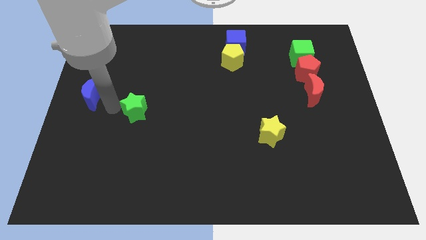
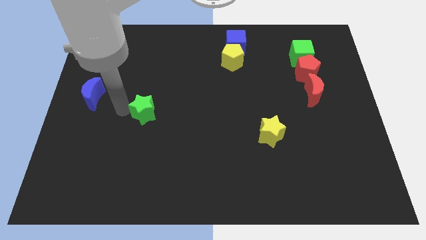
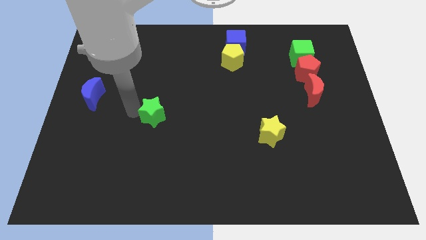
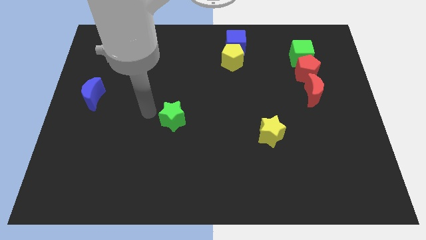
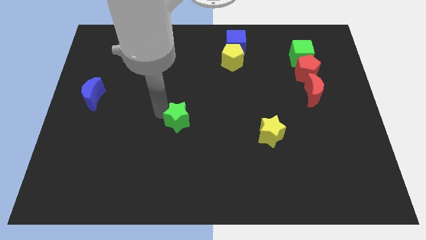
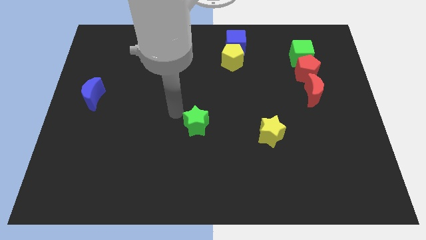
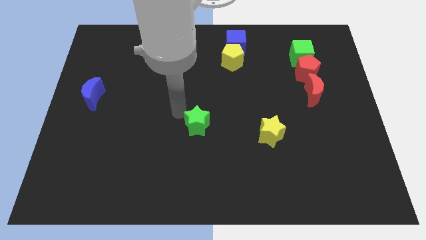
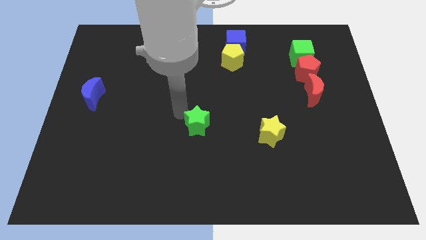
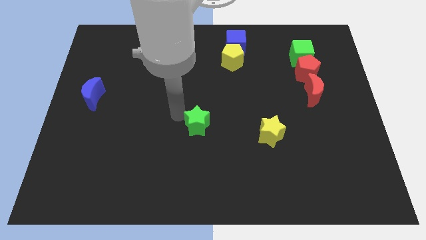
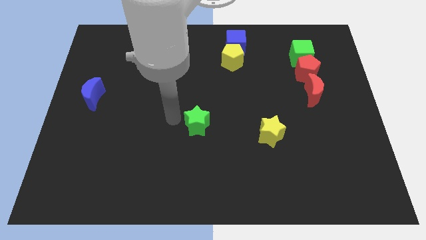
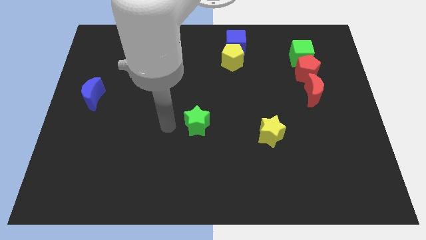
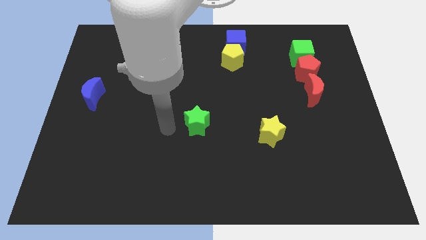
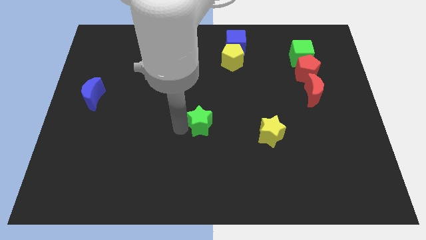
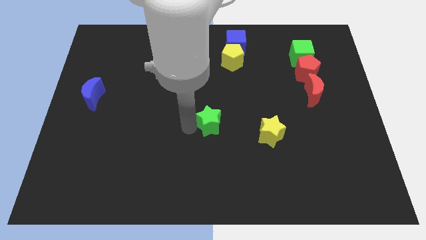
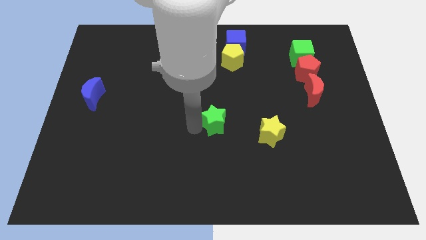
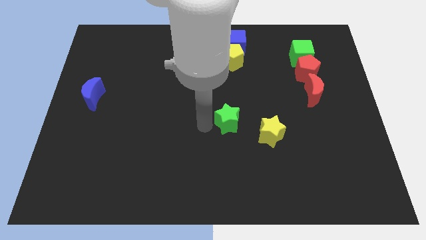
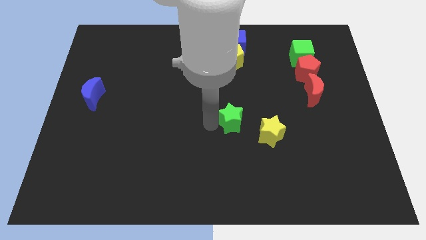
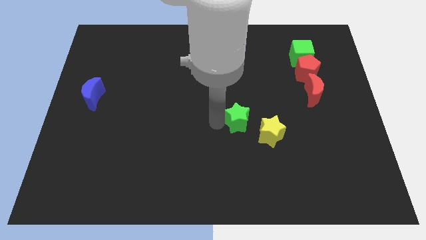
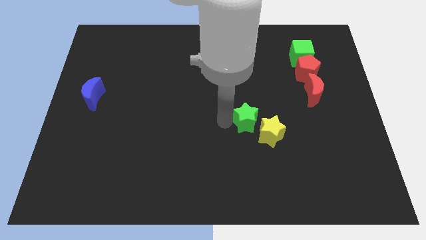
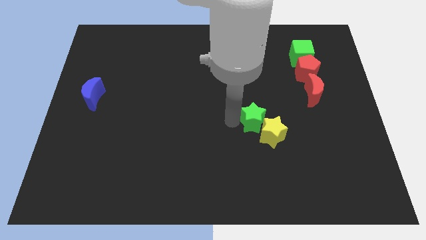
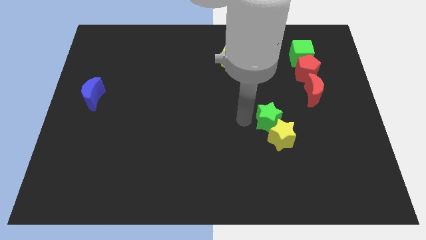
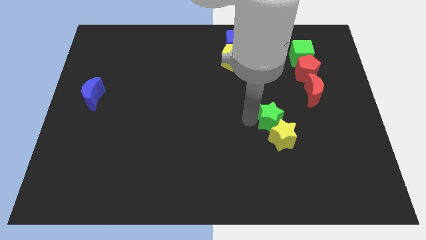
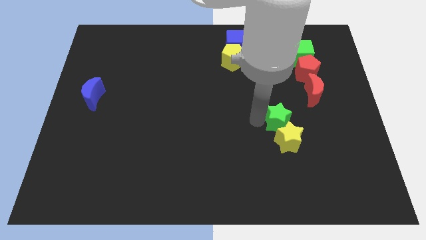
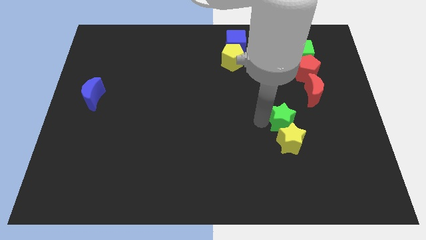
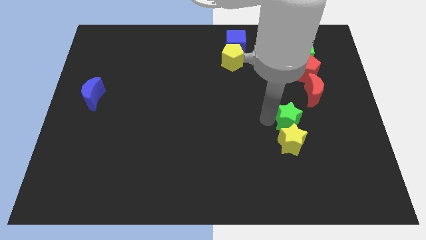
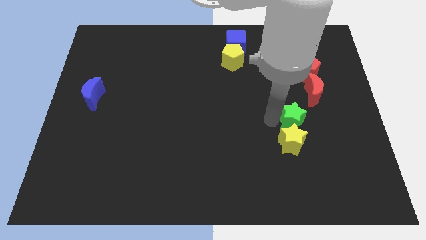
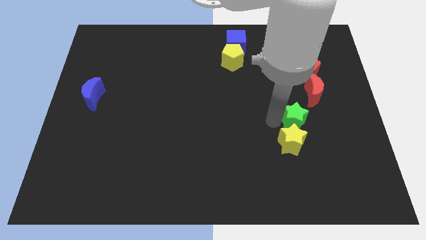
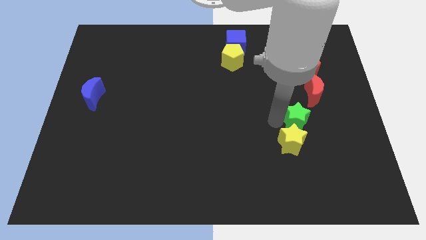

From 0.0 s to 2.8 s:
push the green star into the yellow star

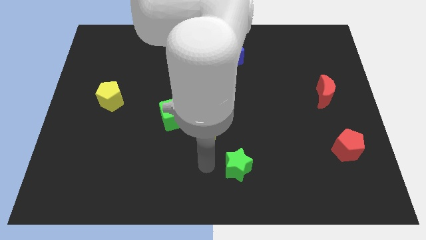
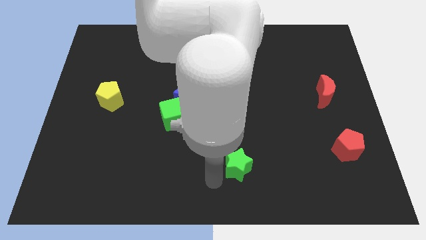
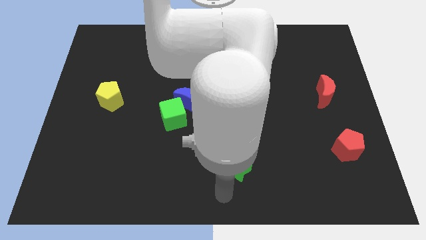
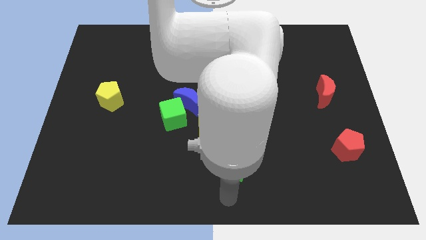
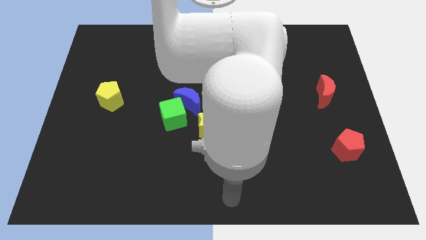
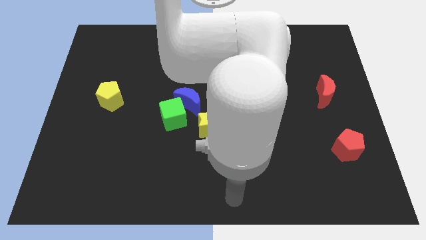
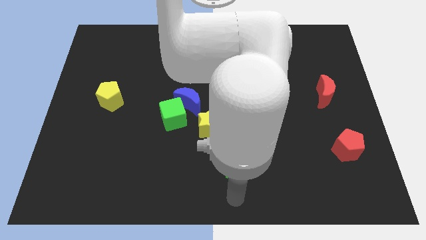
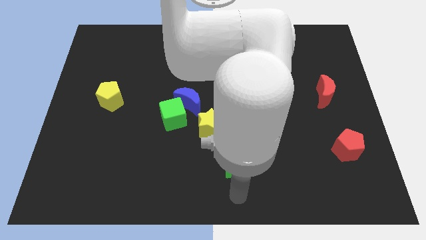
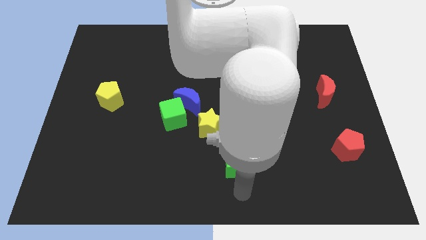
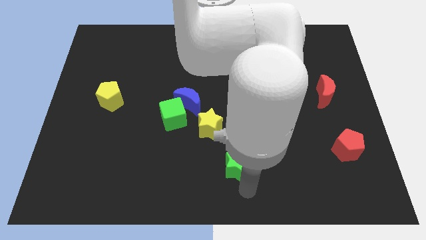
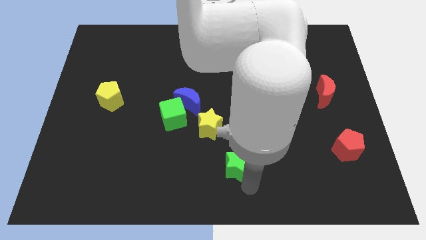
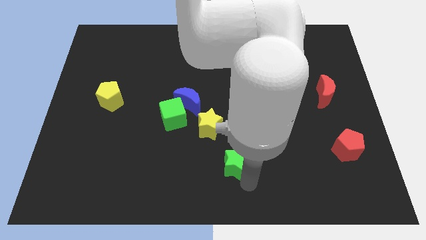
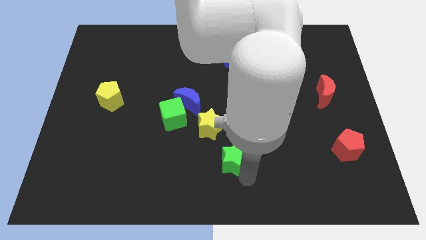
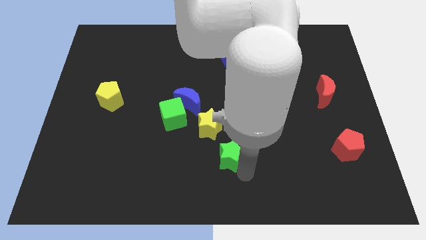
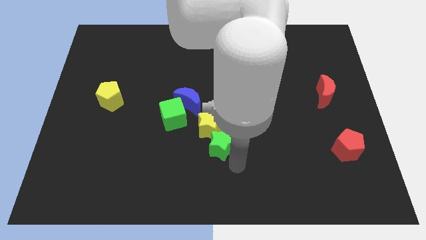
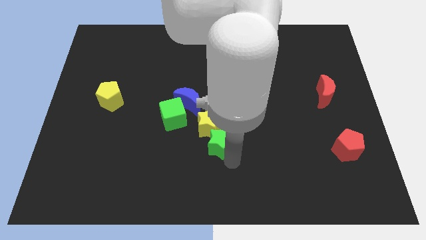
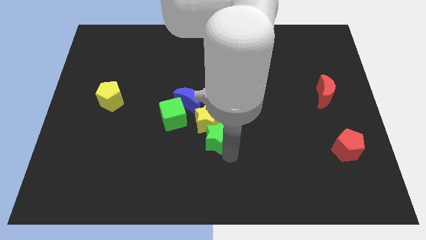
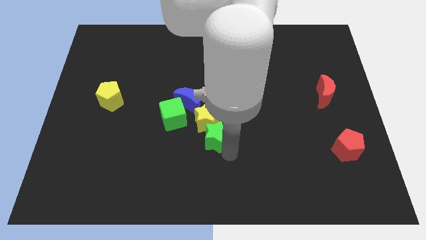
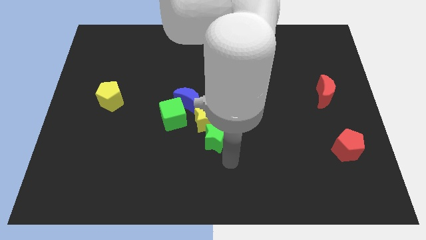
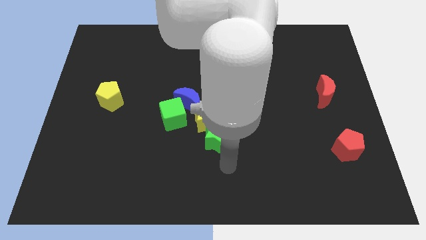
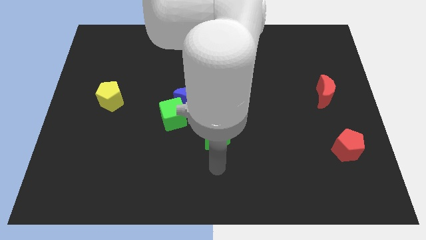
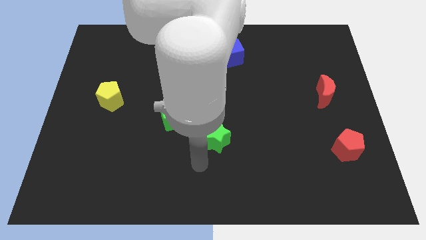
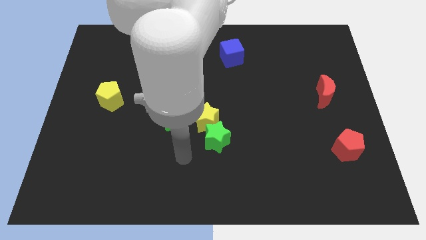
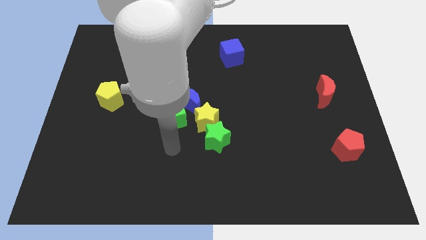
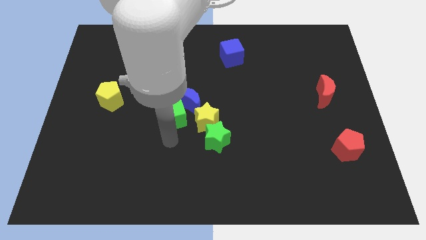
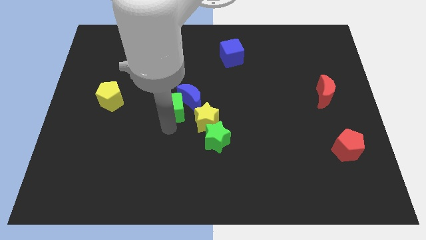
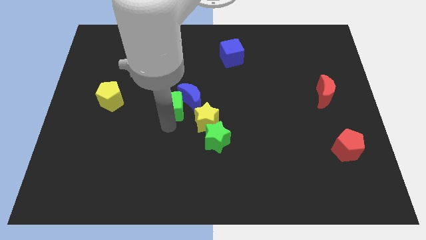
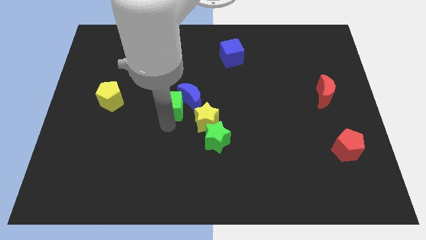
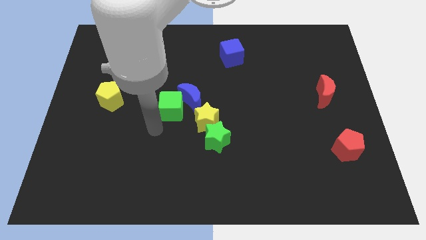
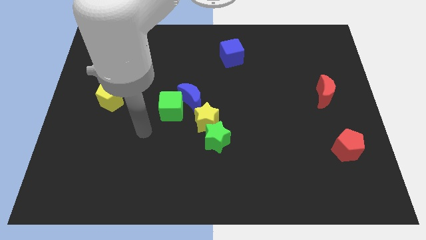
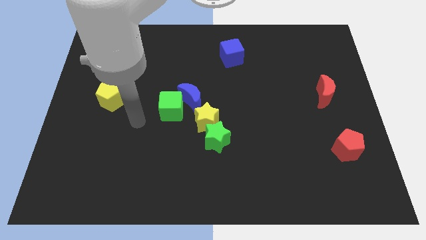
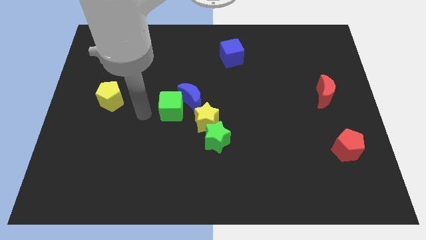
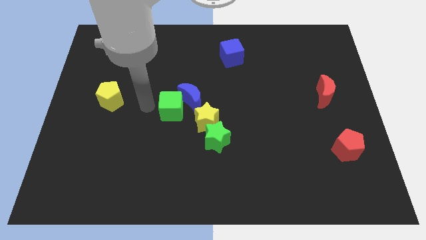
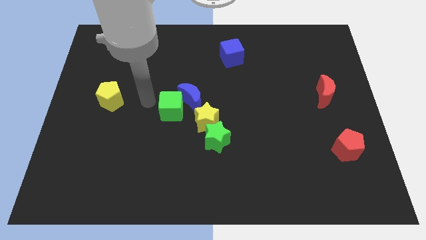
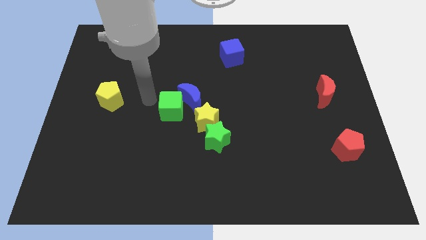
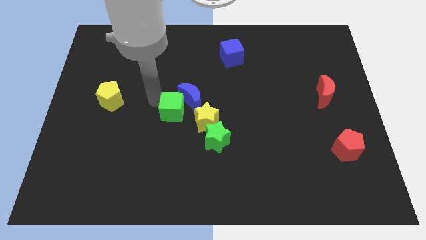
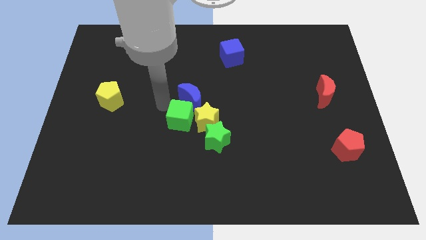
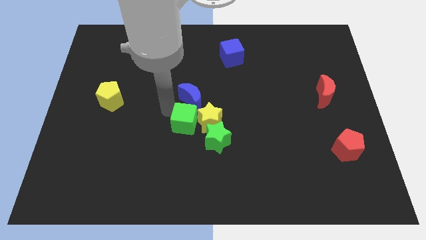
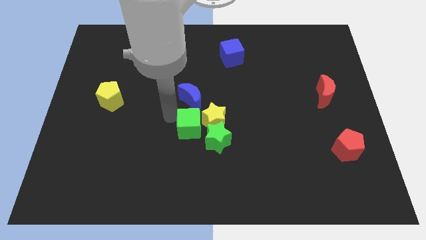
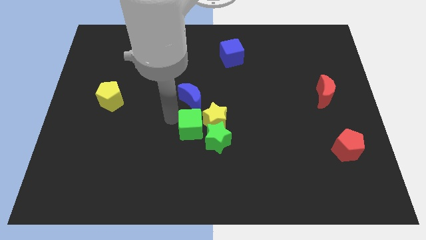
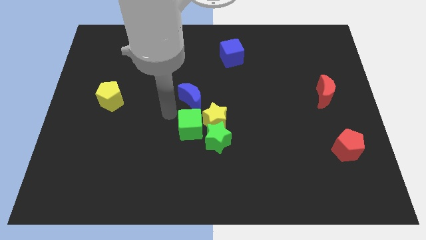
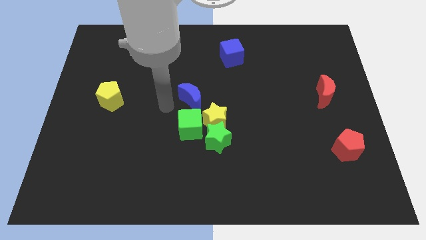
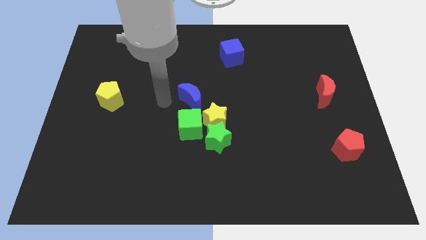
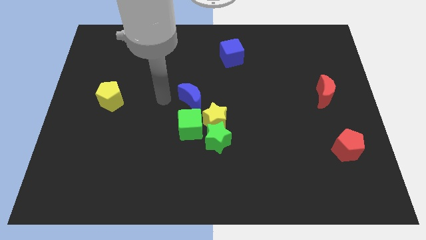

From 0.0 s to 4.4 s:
adjust the green blocks towards the yellow star

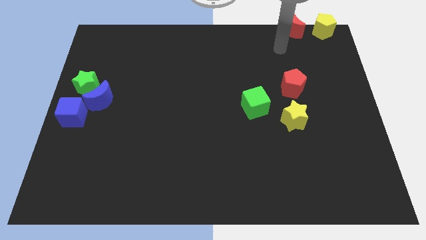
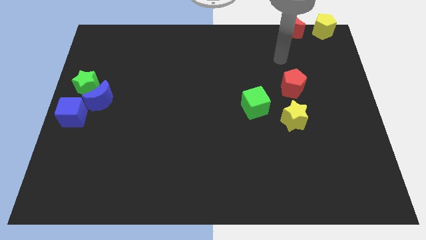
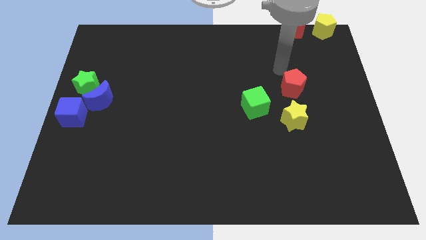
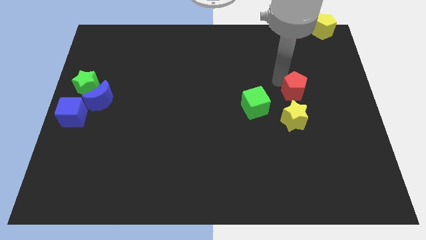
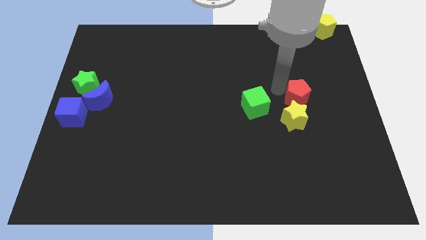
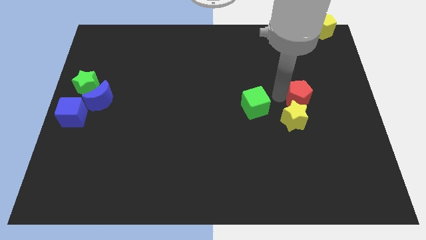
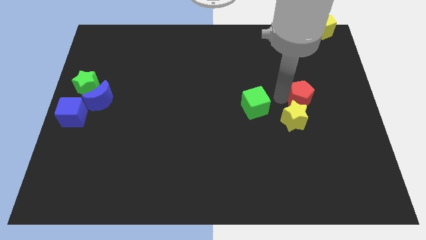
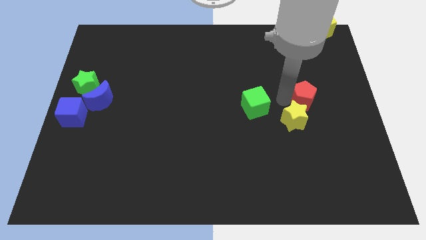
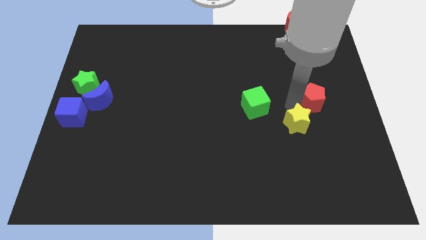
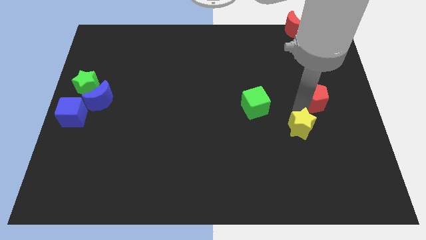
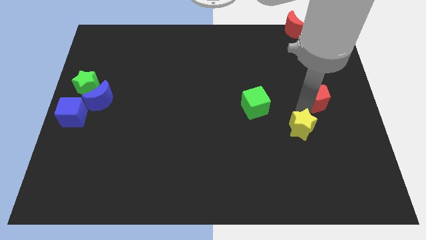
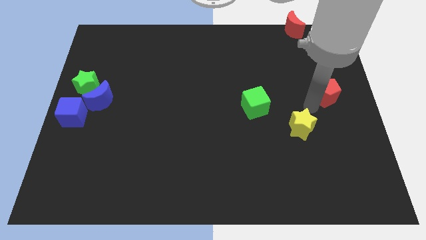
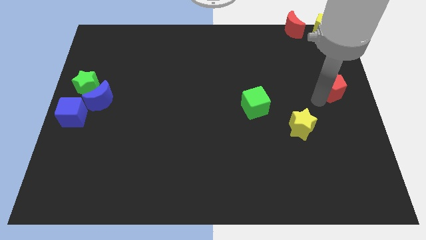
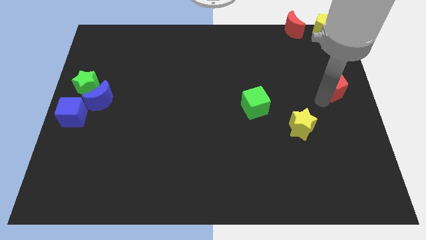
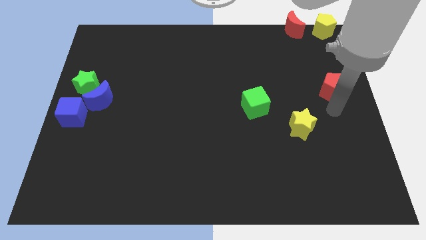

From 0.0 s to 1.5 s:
push the red pentagon towards the right center of the board
